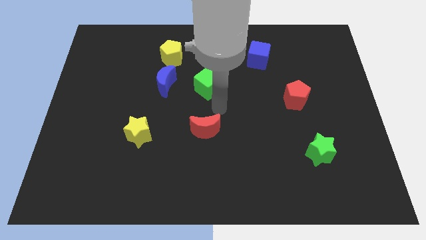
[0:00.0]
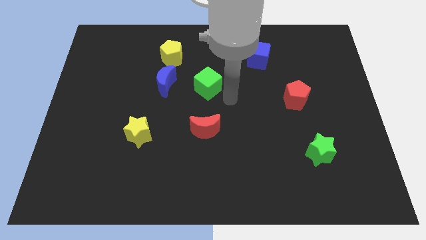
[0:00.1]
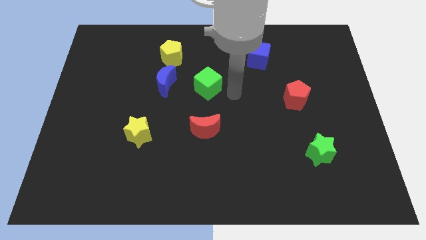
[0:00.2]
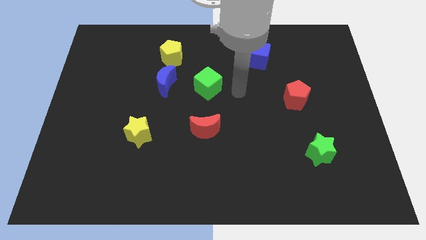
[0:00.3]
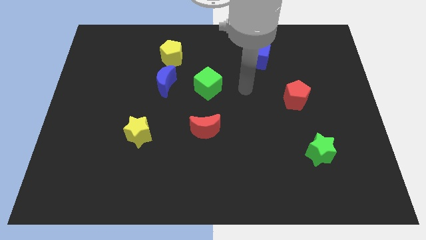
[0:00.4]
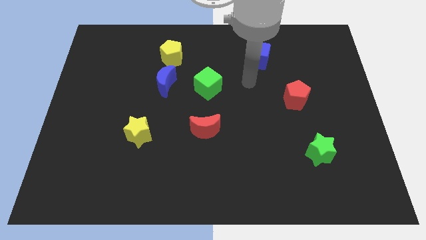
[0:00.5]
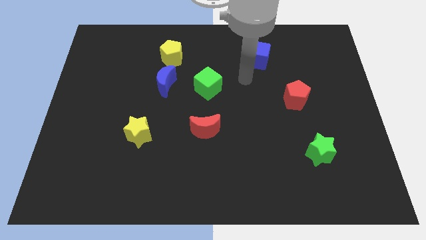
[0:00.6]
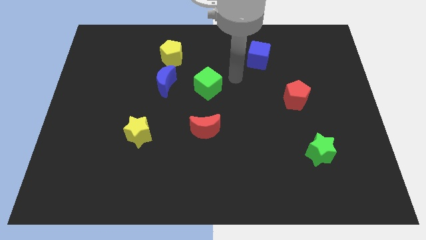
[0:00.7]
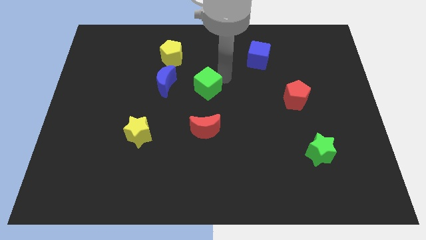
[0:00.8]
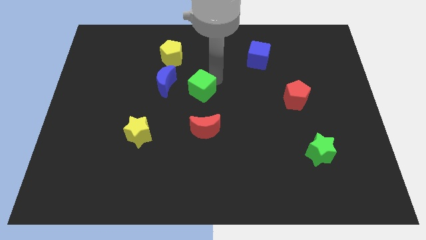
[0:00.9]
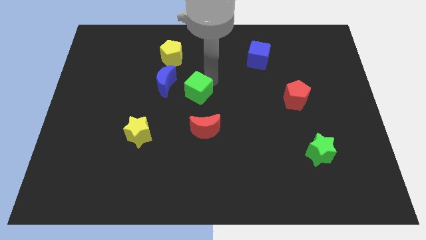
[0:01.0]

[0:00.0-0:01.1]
point your arm above green cube

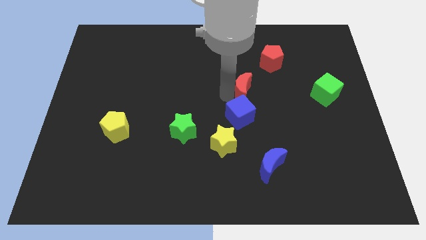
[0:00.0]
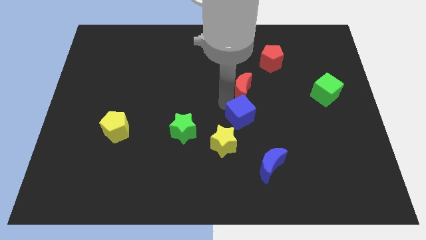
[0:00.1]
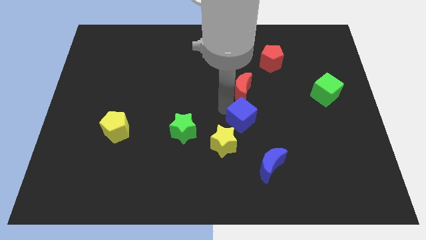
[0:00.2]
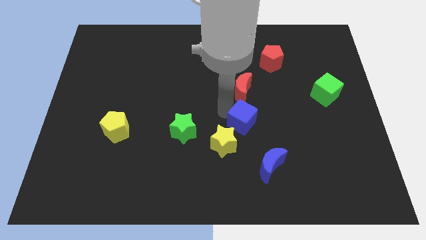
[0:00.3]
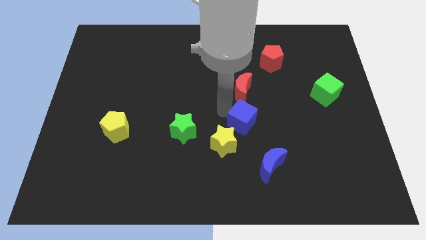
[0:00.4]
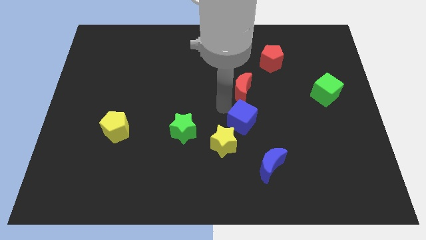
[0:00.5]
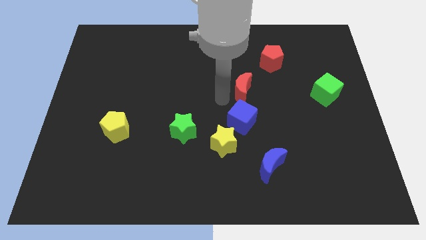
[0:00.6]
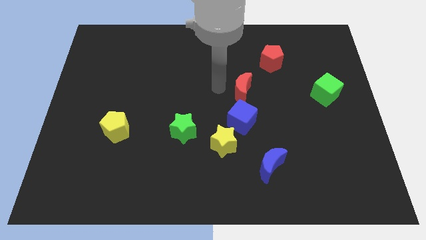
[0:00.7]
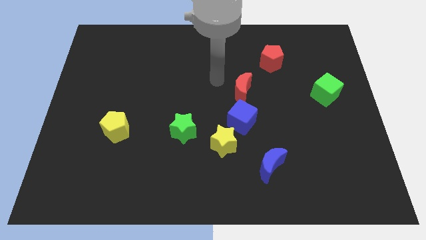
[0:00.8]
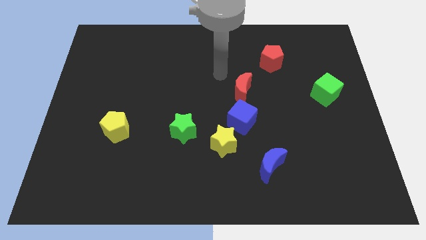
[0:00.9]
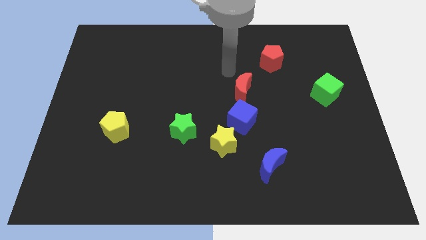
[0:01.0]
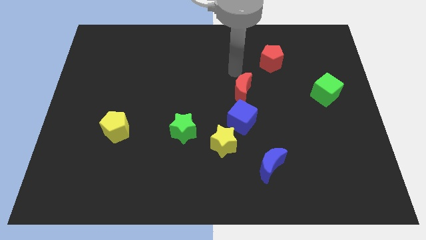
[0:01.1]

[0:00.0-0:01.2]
slightly push the blue cube towards the yellow star

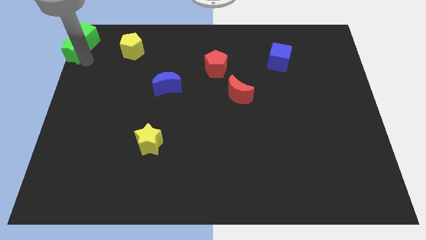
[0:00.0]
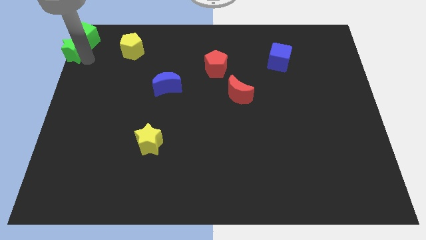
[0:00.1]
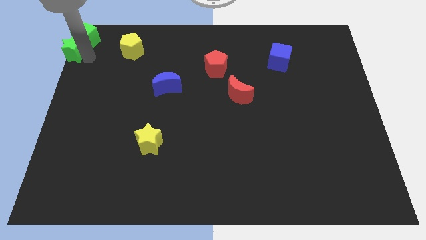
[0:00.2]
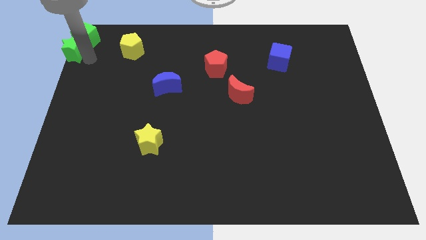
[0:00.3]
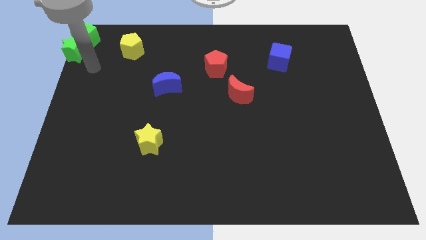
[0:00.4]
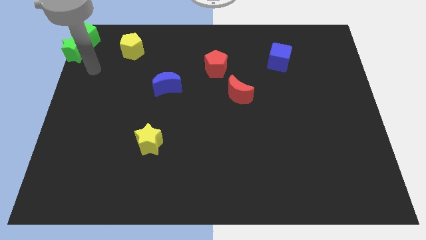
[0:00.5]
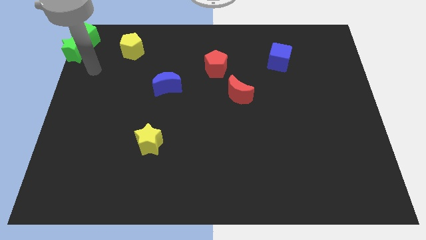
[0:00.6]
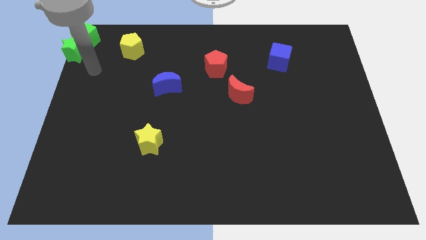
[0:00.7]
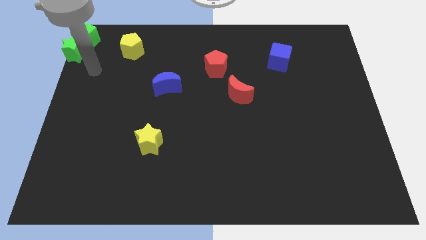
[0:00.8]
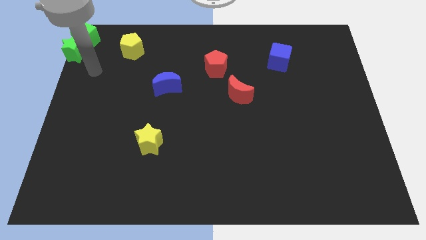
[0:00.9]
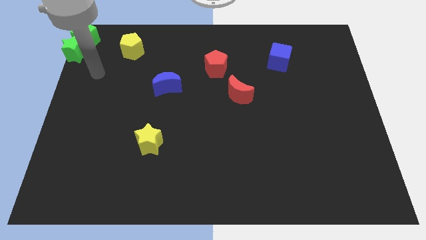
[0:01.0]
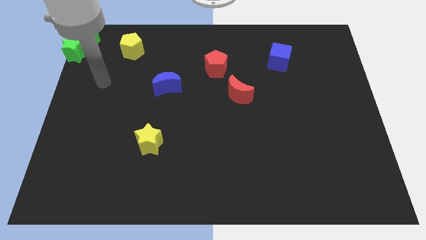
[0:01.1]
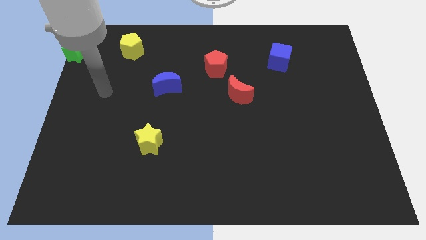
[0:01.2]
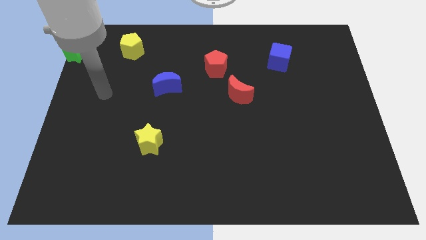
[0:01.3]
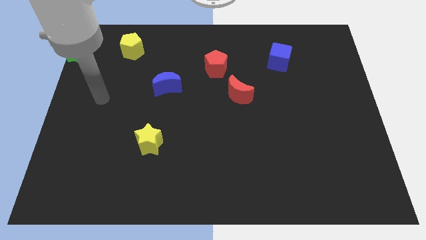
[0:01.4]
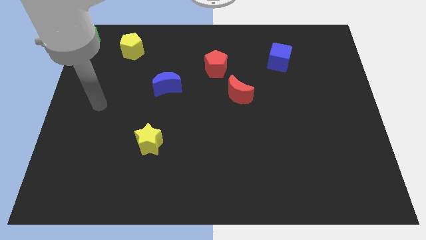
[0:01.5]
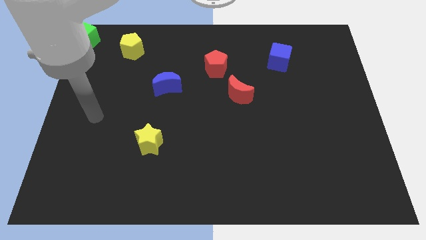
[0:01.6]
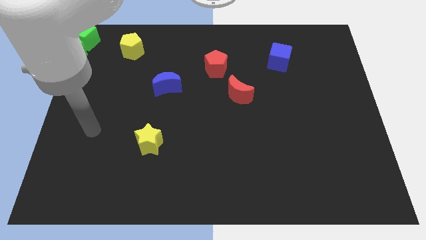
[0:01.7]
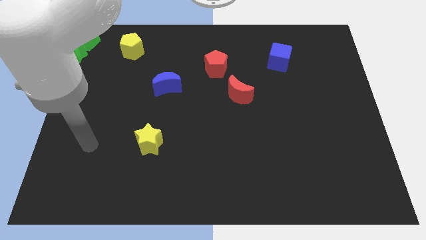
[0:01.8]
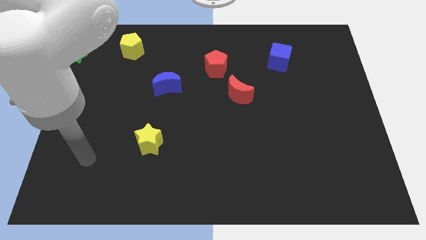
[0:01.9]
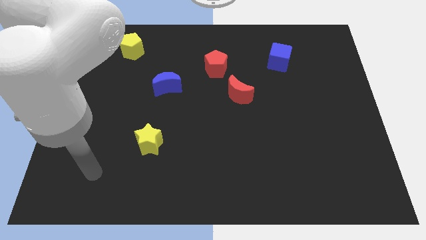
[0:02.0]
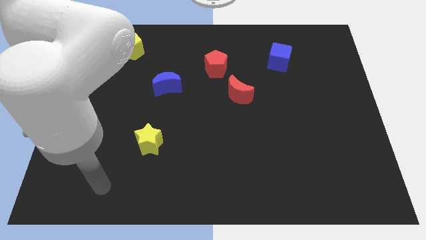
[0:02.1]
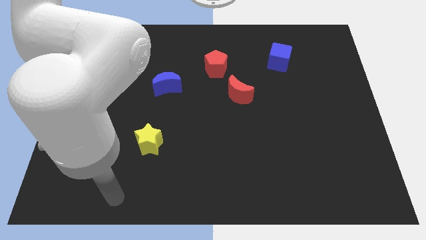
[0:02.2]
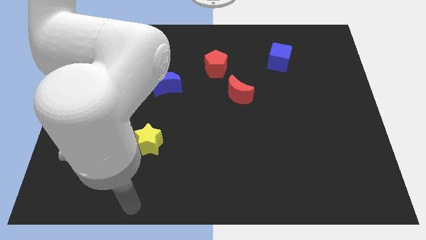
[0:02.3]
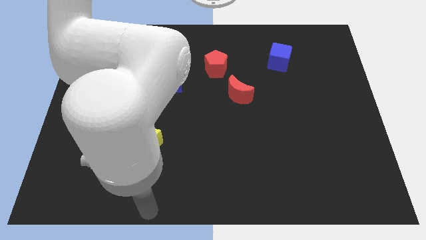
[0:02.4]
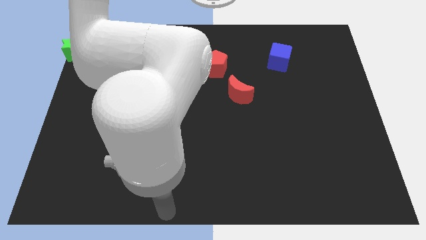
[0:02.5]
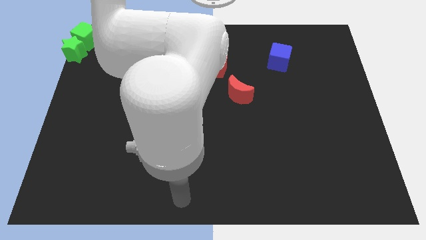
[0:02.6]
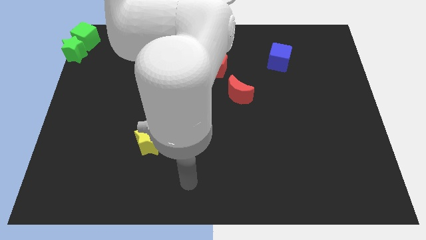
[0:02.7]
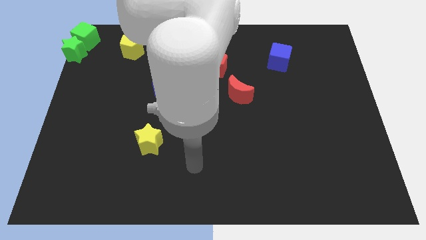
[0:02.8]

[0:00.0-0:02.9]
move your arm down to the bottom of the board

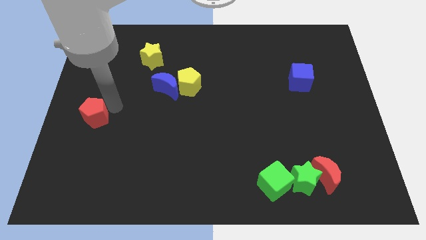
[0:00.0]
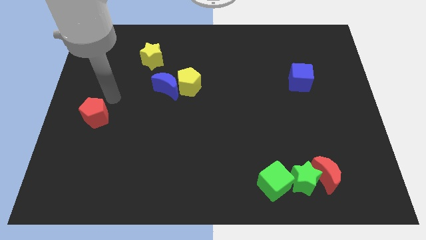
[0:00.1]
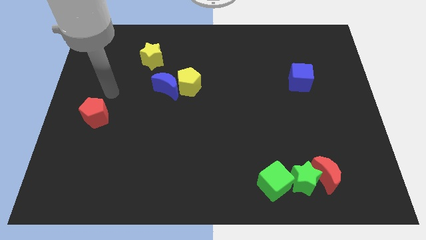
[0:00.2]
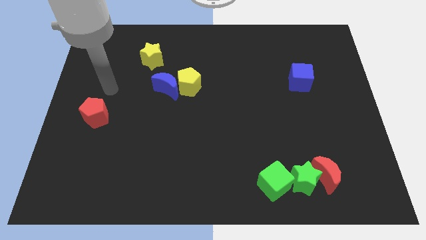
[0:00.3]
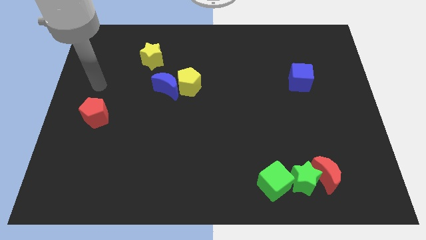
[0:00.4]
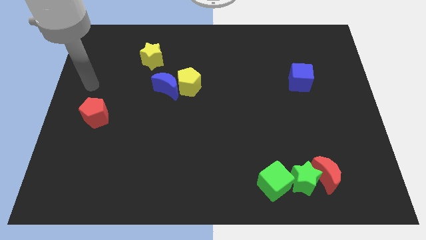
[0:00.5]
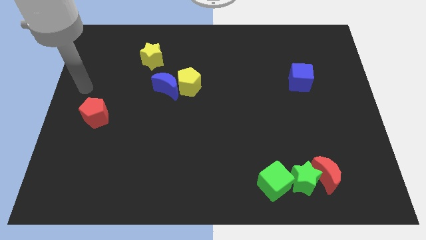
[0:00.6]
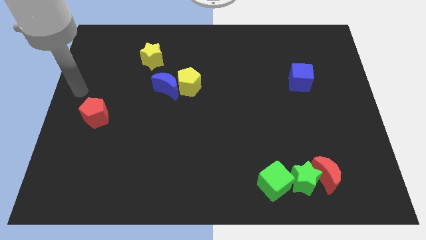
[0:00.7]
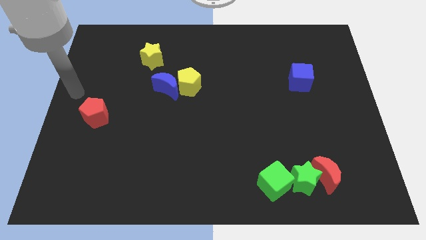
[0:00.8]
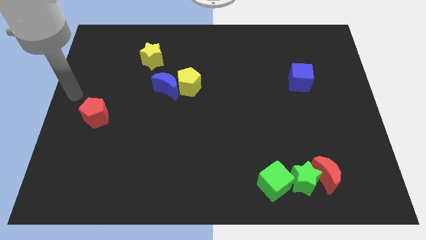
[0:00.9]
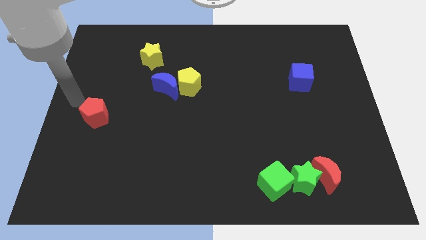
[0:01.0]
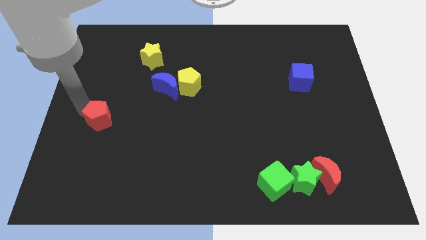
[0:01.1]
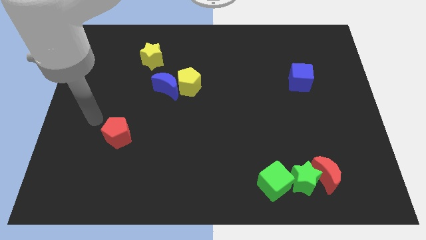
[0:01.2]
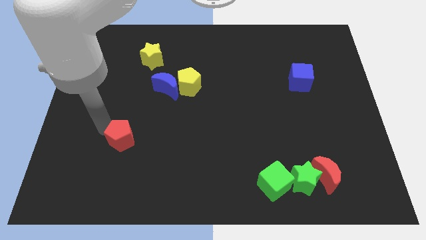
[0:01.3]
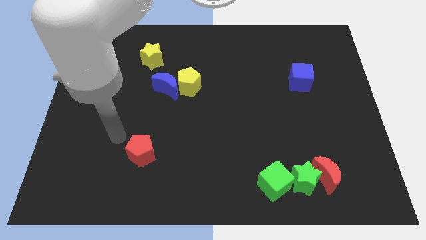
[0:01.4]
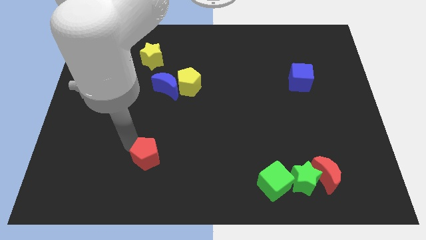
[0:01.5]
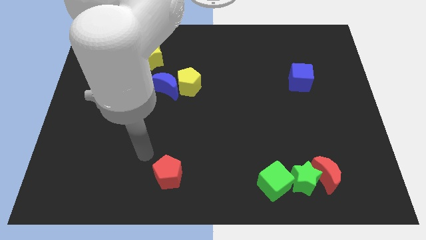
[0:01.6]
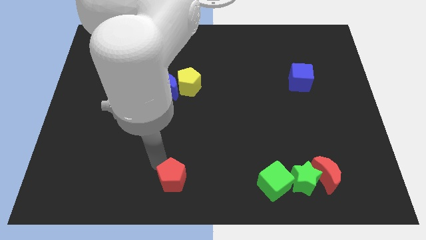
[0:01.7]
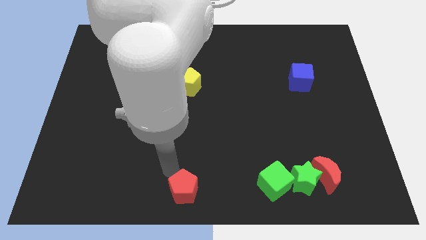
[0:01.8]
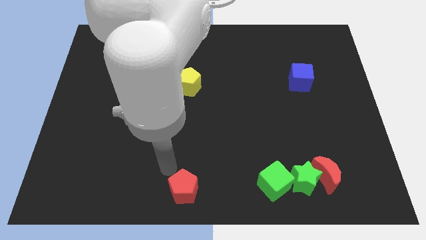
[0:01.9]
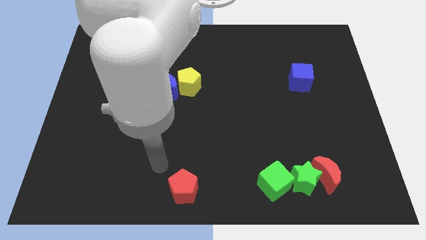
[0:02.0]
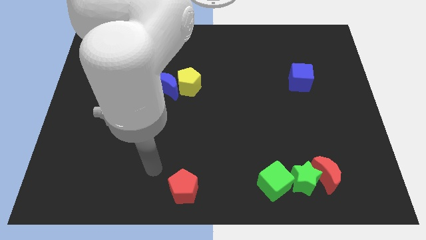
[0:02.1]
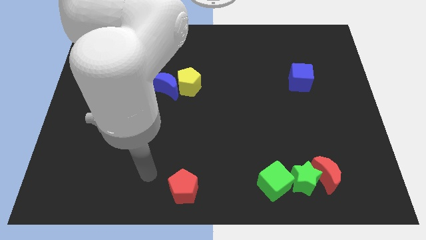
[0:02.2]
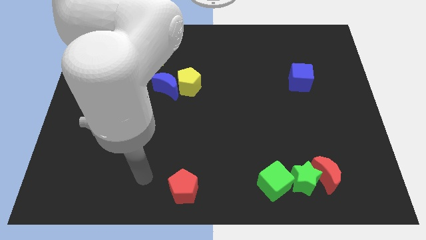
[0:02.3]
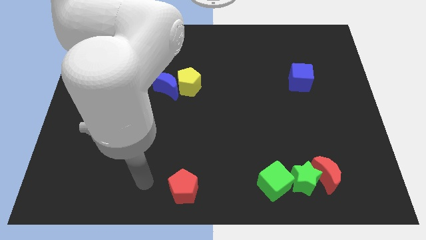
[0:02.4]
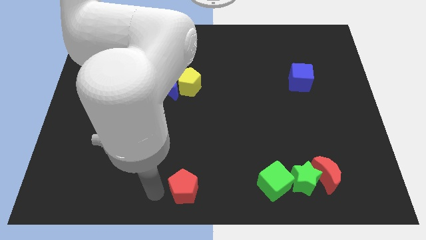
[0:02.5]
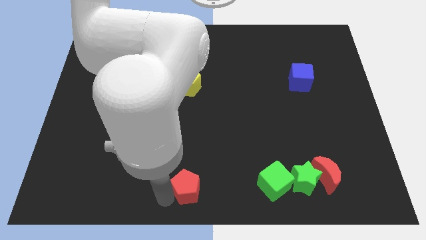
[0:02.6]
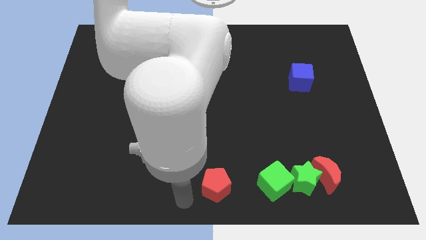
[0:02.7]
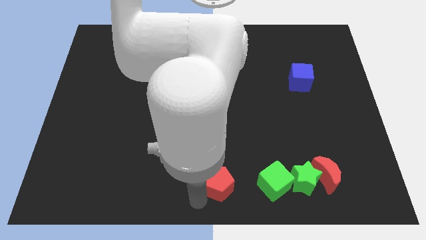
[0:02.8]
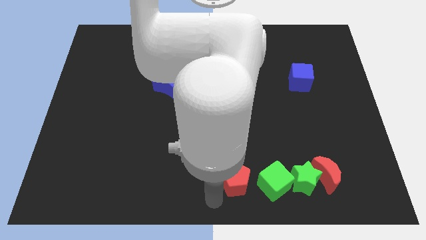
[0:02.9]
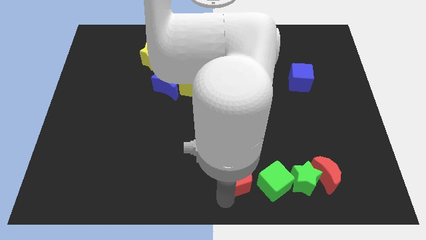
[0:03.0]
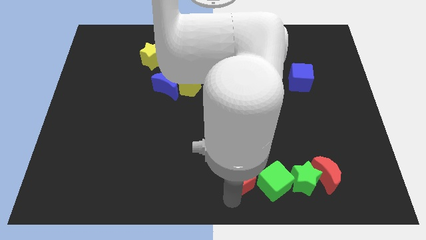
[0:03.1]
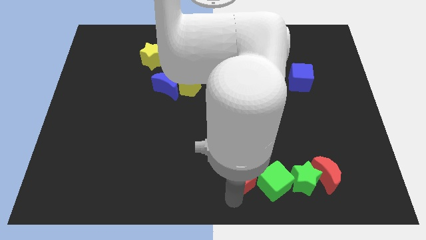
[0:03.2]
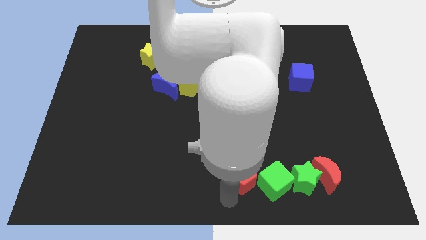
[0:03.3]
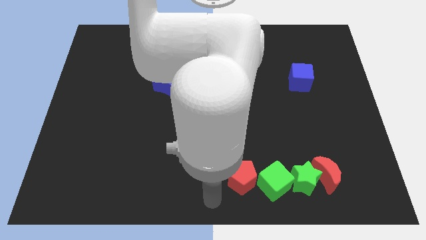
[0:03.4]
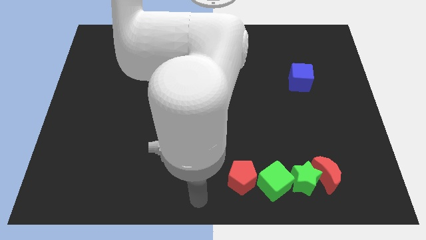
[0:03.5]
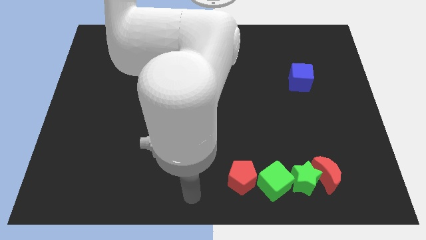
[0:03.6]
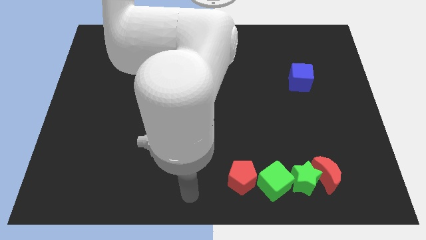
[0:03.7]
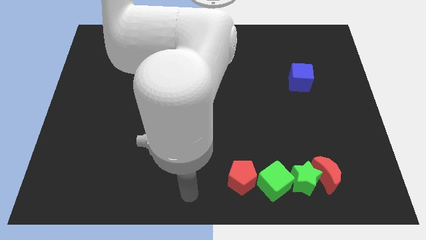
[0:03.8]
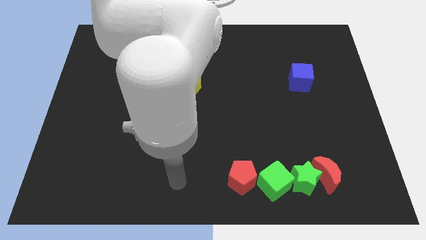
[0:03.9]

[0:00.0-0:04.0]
move the red pentagon to the left side of the green cube
